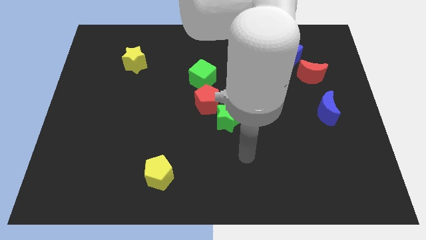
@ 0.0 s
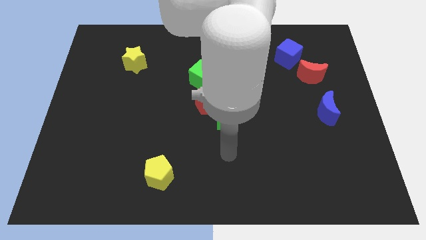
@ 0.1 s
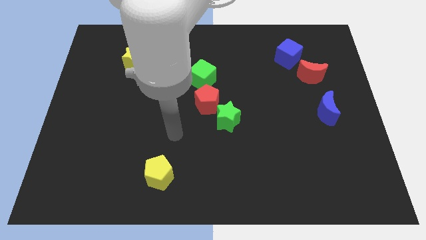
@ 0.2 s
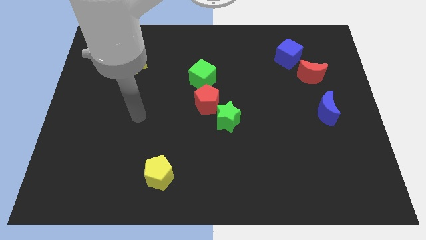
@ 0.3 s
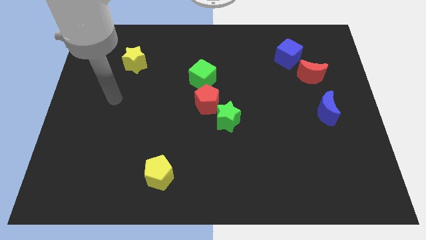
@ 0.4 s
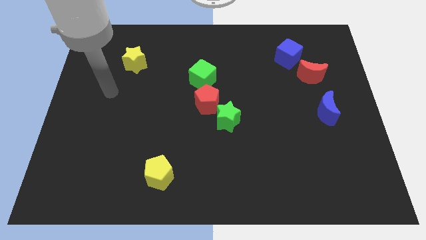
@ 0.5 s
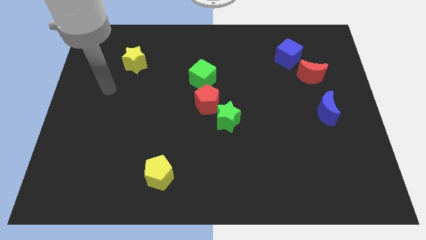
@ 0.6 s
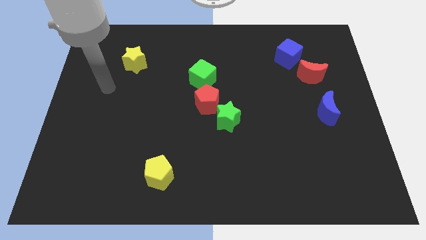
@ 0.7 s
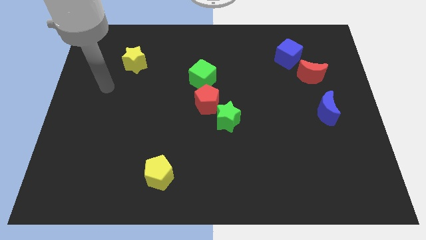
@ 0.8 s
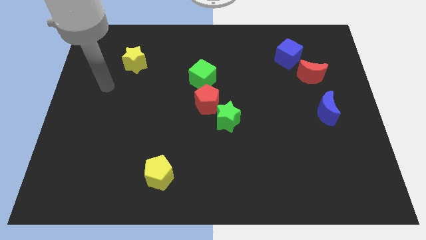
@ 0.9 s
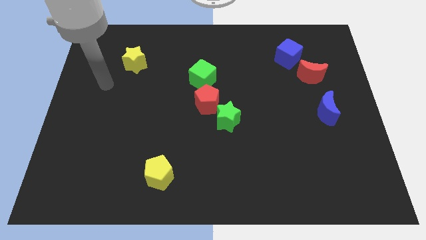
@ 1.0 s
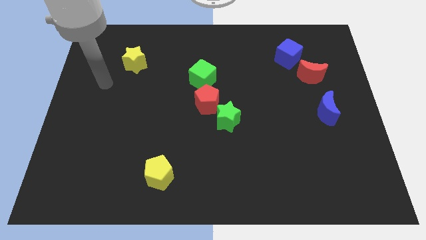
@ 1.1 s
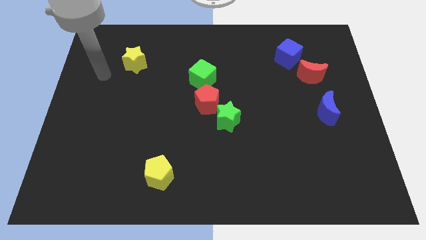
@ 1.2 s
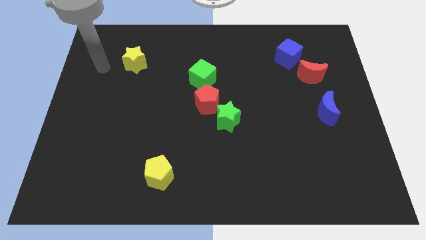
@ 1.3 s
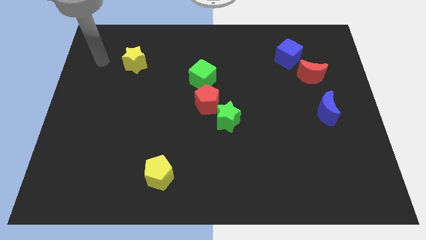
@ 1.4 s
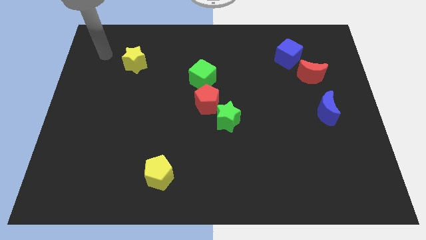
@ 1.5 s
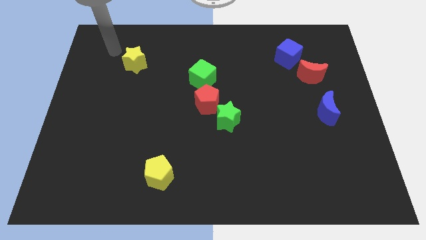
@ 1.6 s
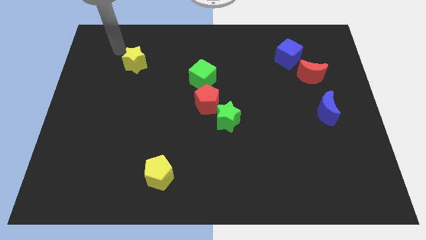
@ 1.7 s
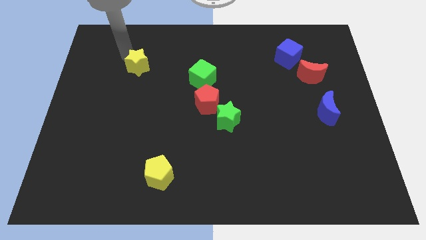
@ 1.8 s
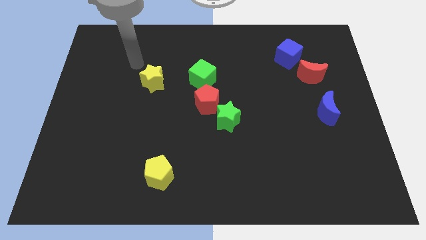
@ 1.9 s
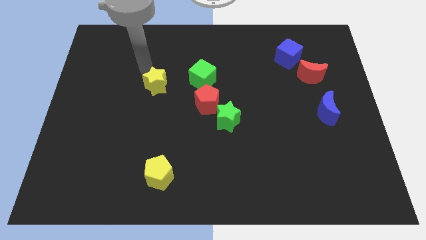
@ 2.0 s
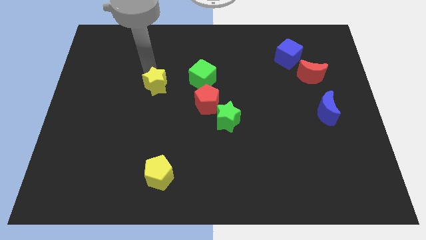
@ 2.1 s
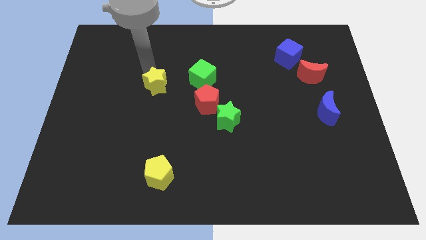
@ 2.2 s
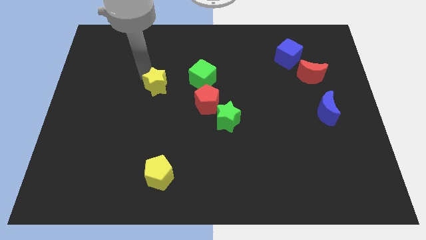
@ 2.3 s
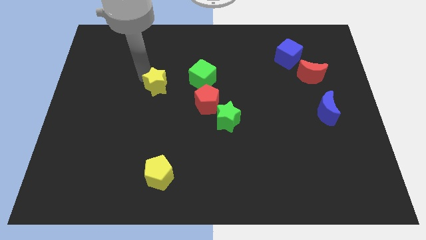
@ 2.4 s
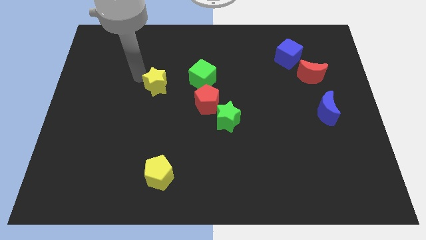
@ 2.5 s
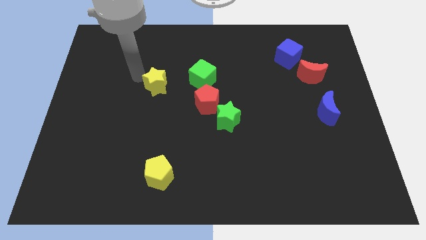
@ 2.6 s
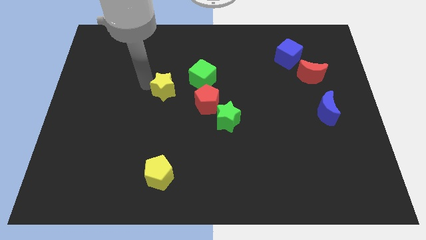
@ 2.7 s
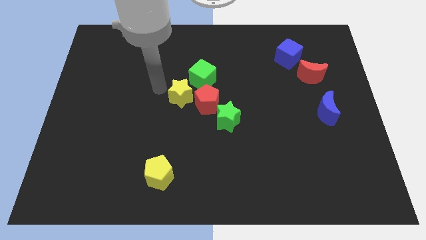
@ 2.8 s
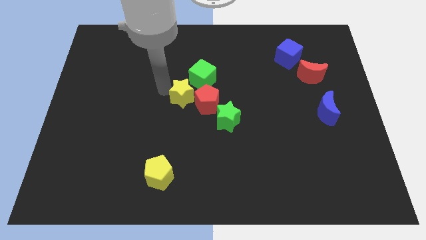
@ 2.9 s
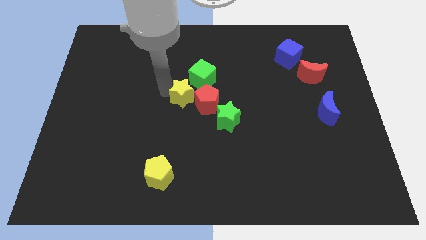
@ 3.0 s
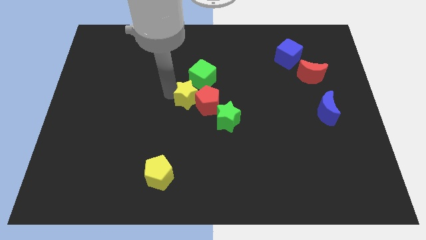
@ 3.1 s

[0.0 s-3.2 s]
push the yellow star towards the red pentagon

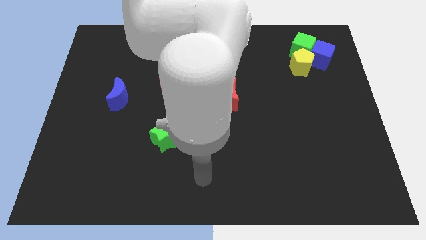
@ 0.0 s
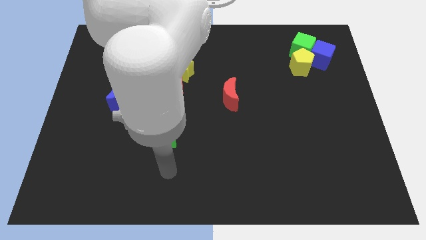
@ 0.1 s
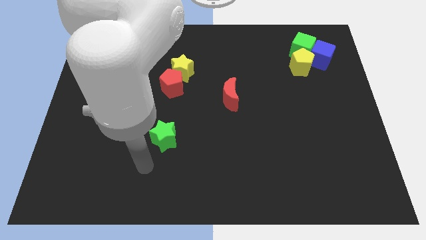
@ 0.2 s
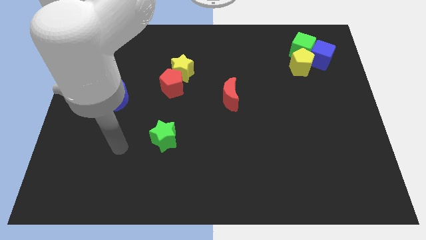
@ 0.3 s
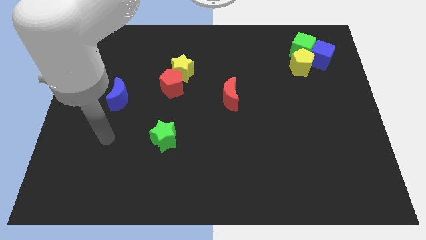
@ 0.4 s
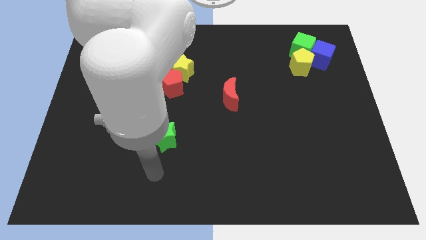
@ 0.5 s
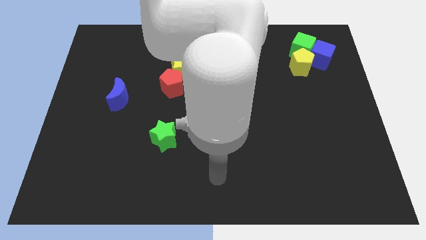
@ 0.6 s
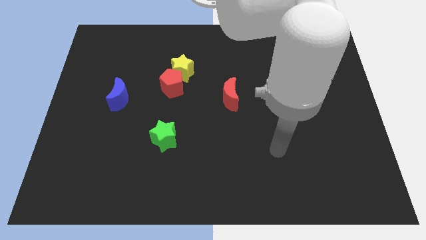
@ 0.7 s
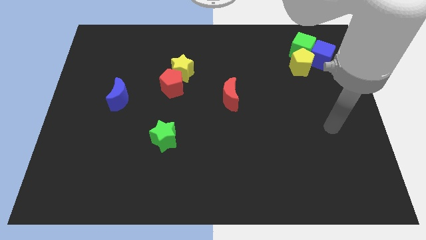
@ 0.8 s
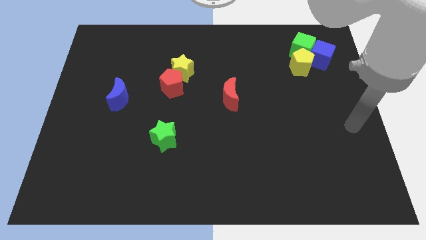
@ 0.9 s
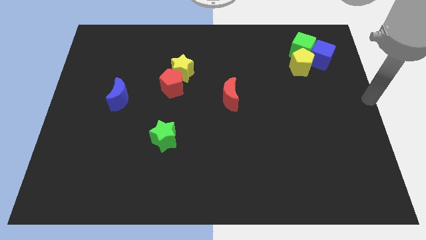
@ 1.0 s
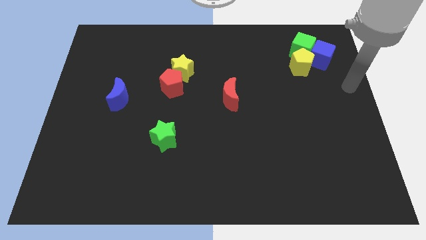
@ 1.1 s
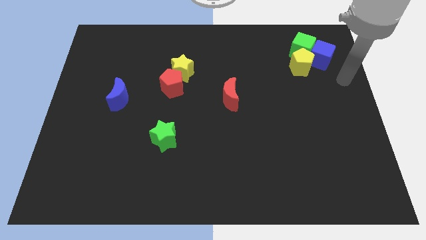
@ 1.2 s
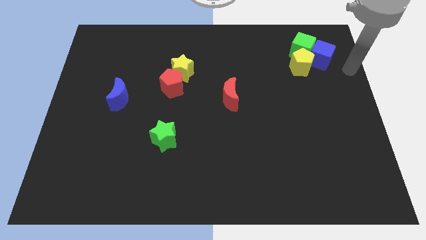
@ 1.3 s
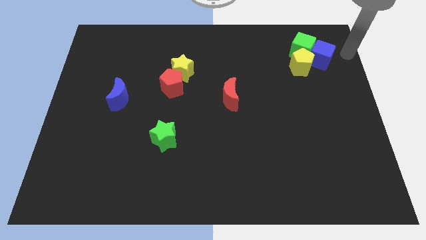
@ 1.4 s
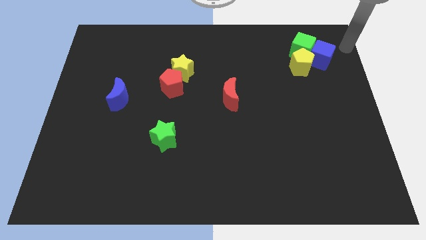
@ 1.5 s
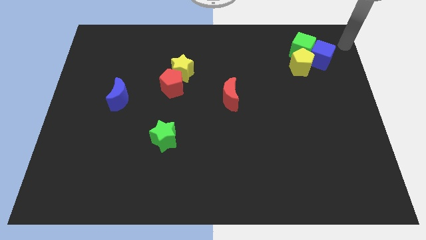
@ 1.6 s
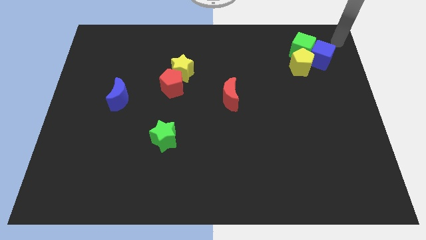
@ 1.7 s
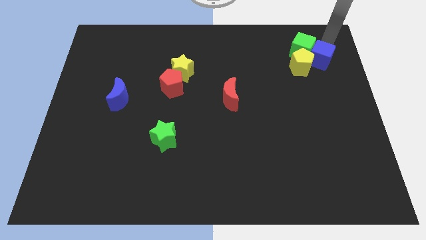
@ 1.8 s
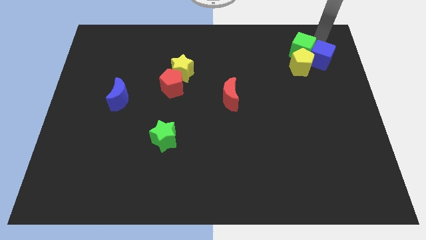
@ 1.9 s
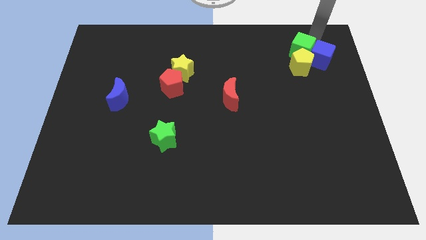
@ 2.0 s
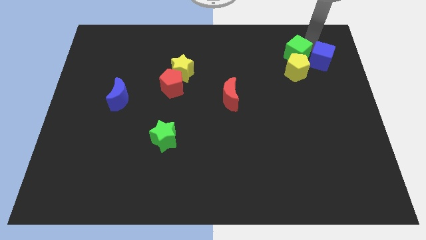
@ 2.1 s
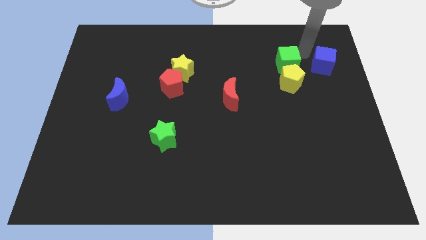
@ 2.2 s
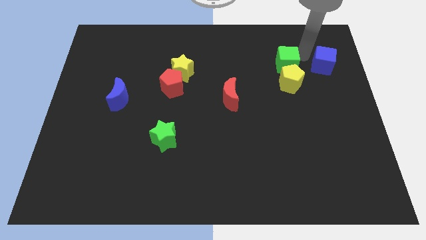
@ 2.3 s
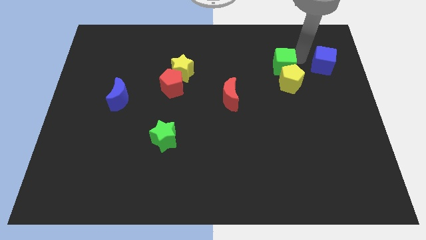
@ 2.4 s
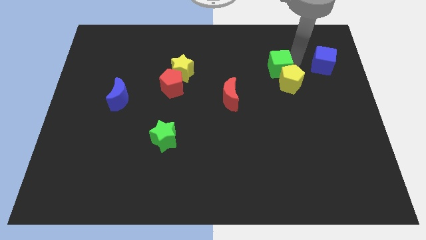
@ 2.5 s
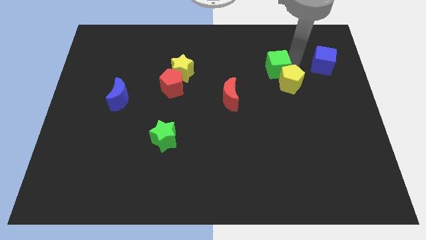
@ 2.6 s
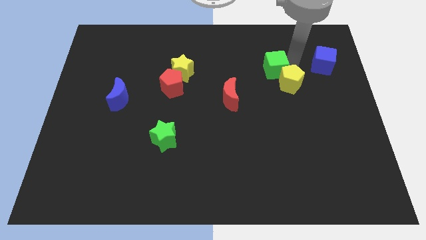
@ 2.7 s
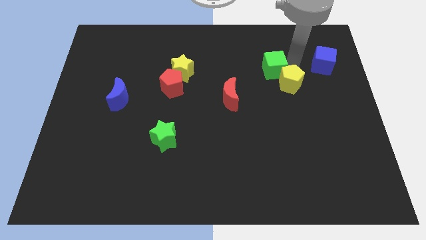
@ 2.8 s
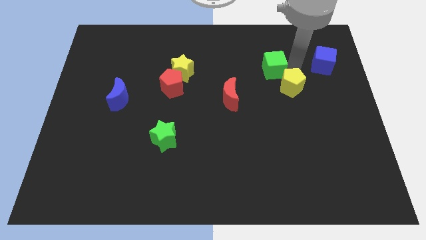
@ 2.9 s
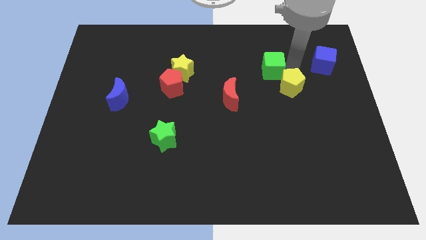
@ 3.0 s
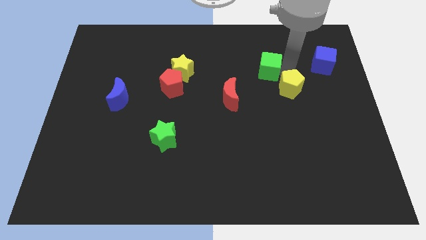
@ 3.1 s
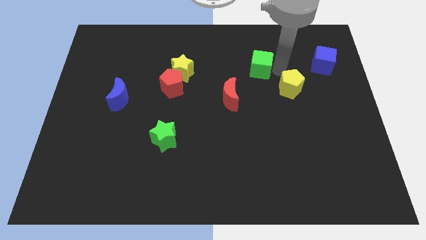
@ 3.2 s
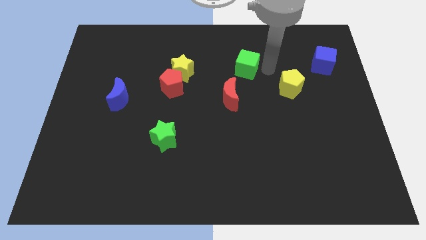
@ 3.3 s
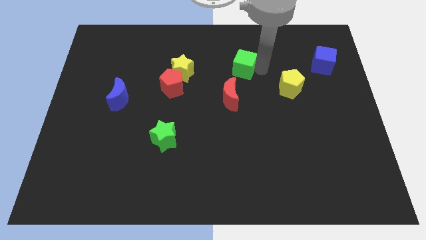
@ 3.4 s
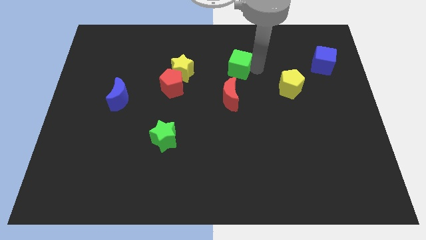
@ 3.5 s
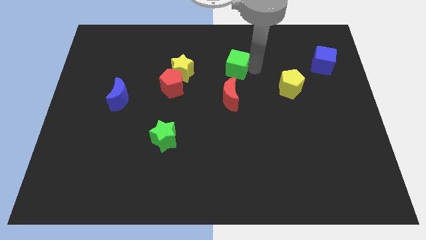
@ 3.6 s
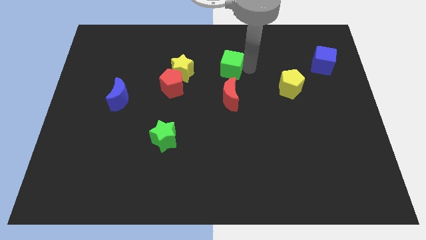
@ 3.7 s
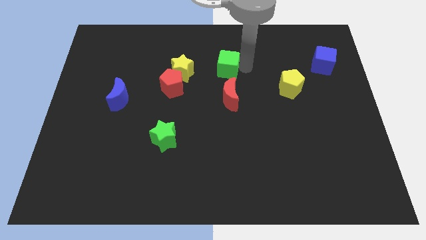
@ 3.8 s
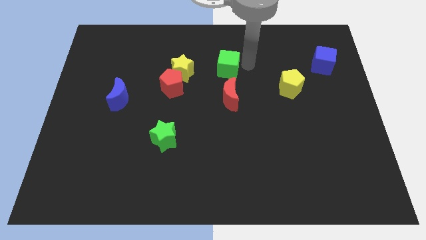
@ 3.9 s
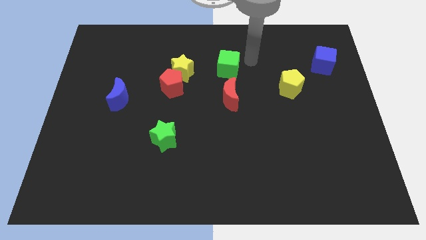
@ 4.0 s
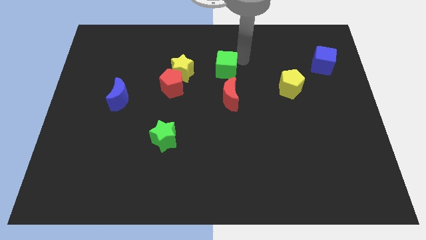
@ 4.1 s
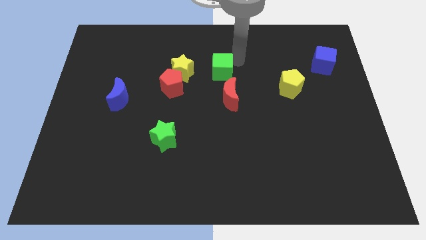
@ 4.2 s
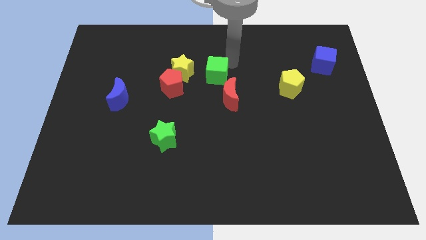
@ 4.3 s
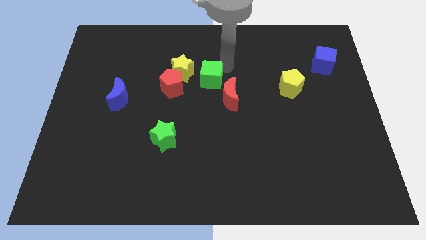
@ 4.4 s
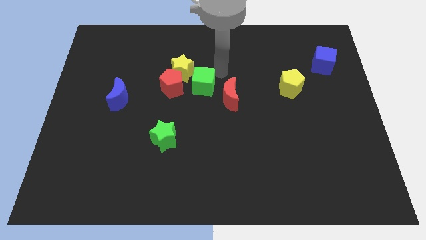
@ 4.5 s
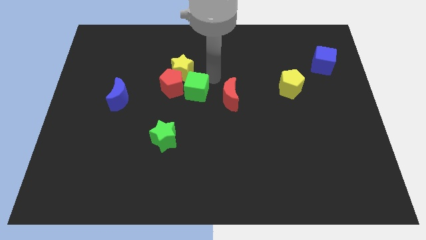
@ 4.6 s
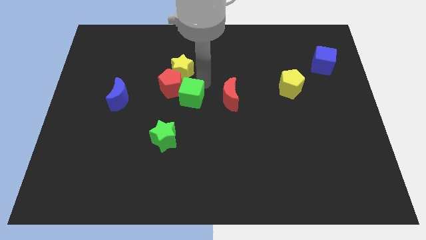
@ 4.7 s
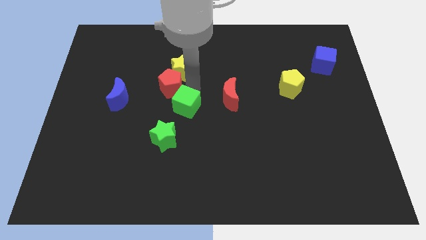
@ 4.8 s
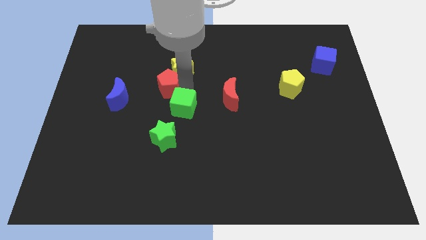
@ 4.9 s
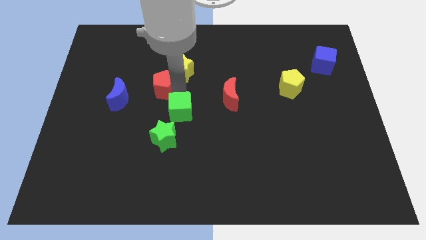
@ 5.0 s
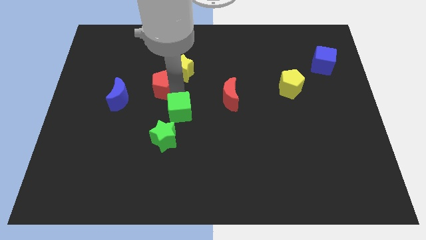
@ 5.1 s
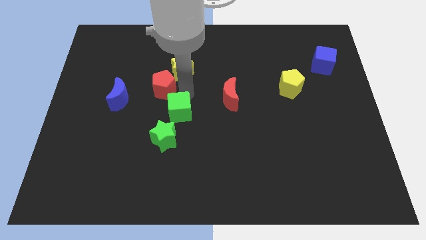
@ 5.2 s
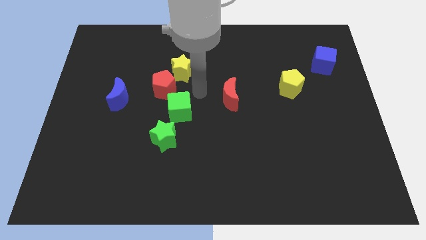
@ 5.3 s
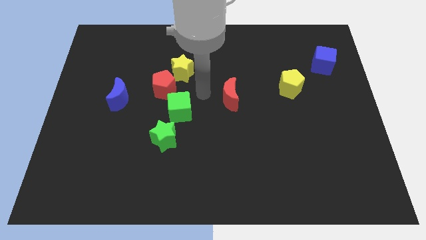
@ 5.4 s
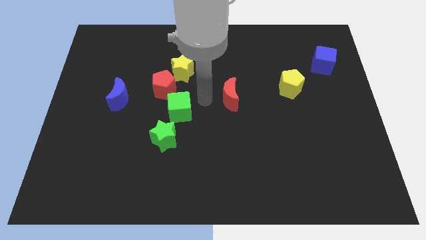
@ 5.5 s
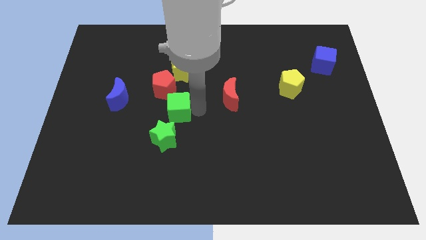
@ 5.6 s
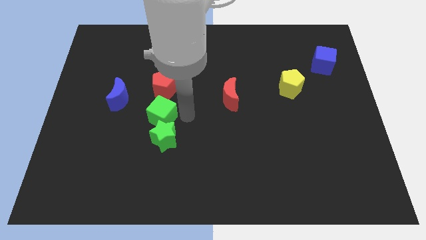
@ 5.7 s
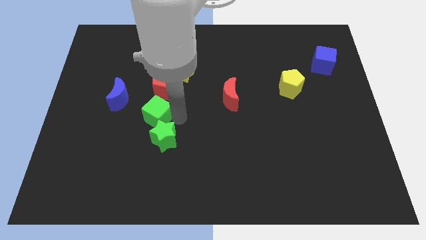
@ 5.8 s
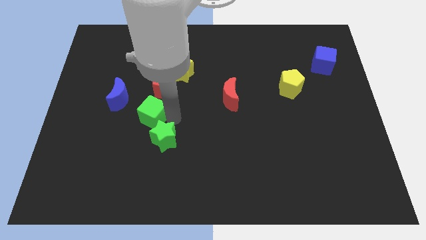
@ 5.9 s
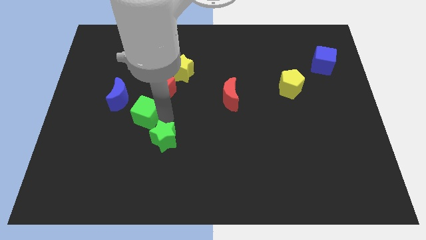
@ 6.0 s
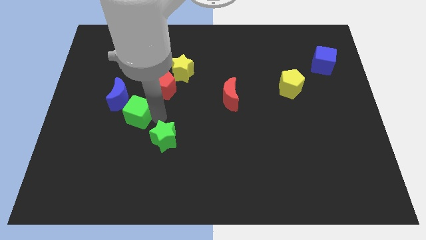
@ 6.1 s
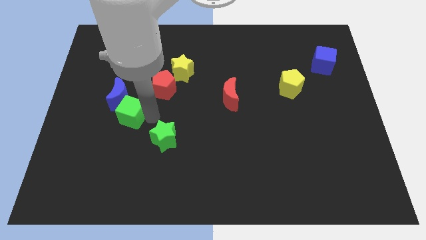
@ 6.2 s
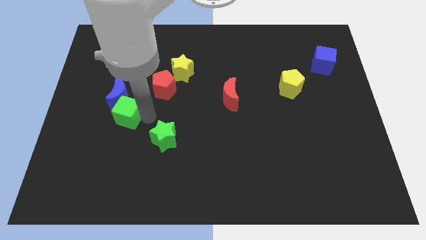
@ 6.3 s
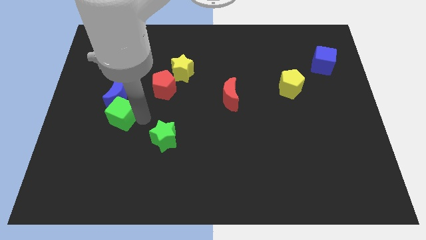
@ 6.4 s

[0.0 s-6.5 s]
push the green cube close to the blue moon
